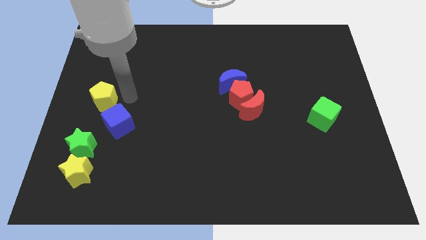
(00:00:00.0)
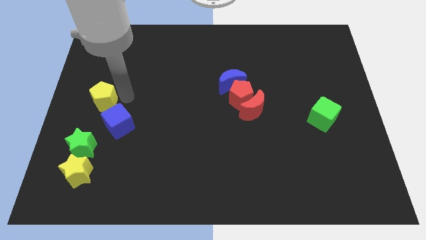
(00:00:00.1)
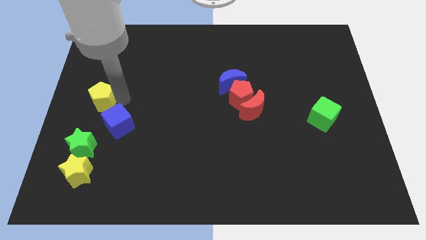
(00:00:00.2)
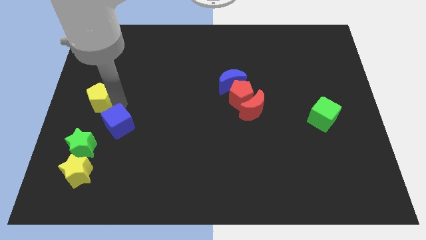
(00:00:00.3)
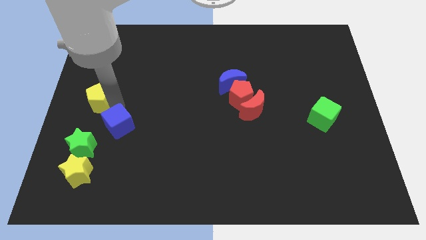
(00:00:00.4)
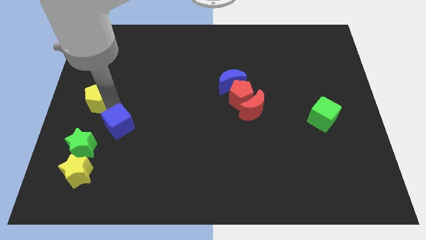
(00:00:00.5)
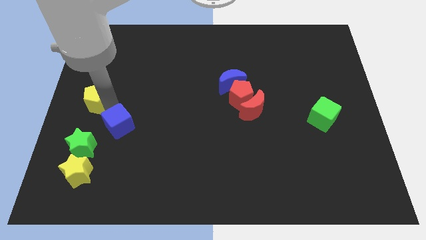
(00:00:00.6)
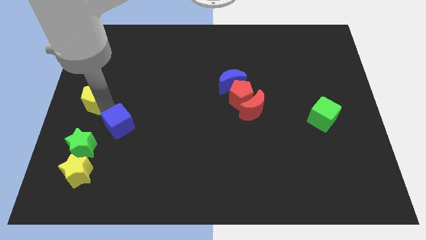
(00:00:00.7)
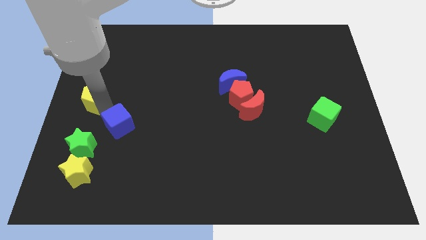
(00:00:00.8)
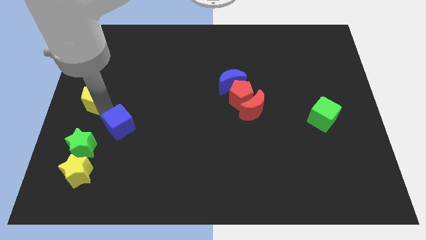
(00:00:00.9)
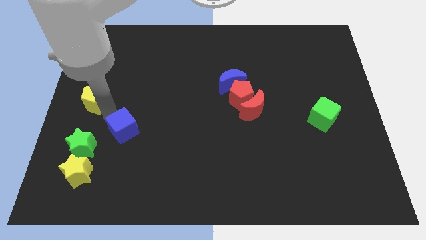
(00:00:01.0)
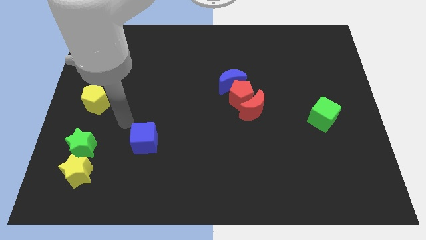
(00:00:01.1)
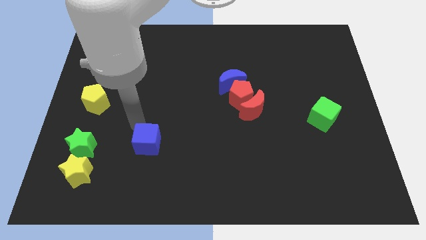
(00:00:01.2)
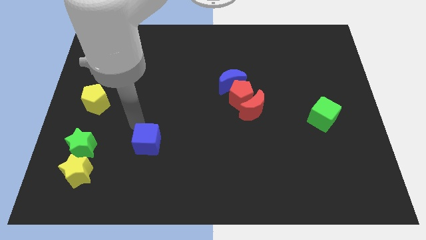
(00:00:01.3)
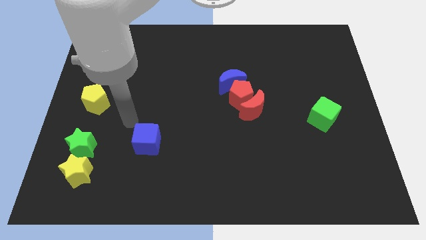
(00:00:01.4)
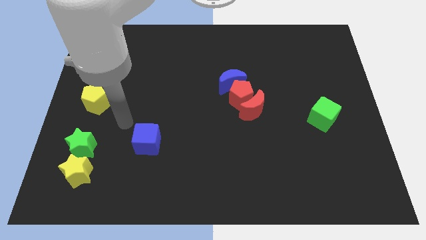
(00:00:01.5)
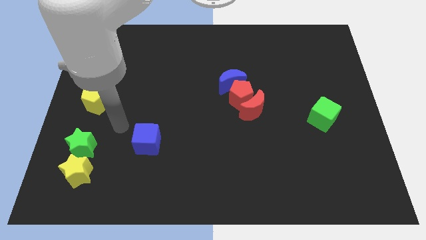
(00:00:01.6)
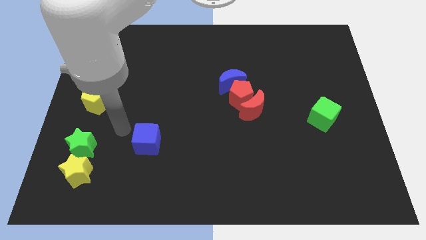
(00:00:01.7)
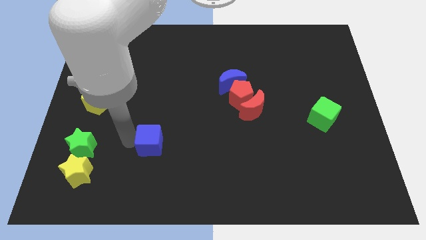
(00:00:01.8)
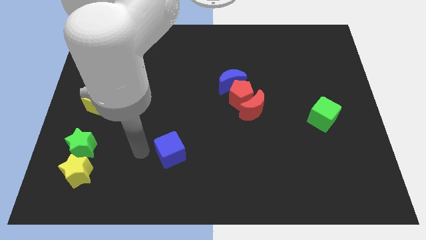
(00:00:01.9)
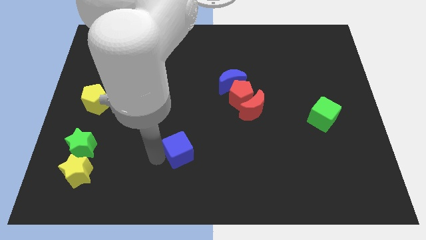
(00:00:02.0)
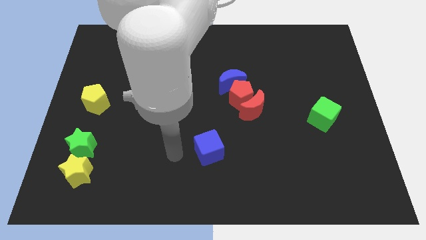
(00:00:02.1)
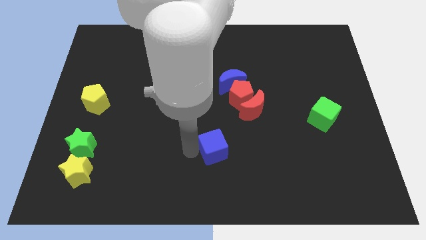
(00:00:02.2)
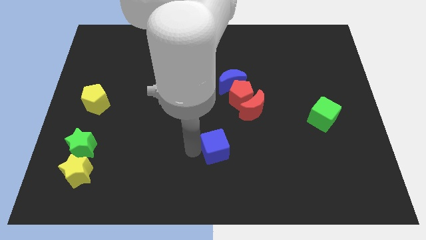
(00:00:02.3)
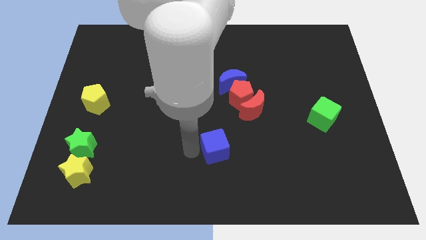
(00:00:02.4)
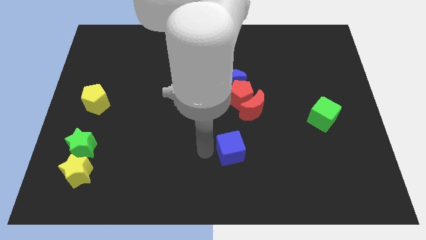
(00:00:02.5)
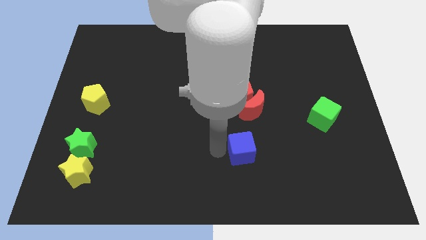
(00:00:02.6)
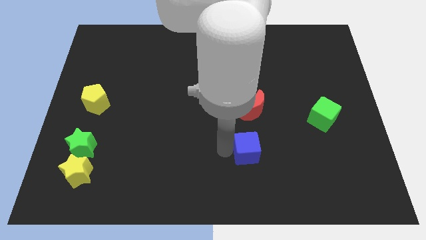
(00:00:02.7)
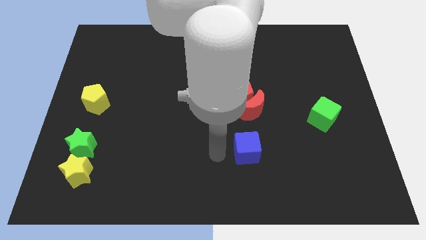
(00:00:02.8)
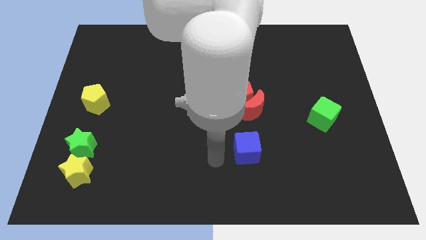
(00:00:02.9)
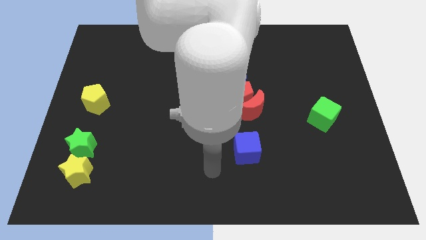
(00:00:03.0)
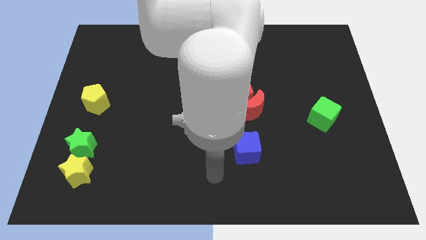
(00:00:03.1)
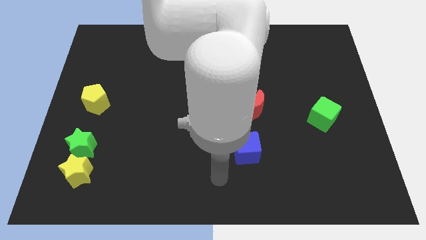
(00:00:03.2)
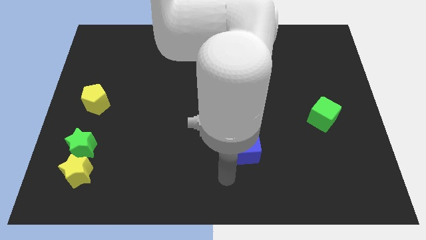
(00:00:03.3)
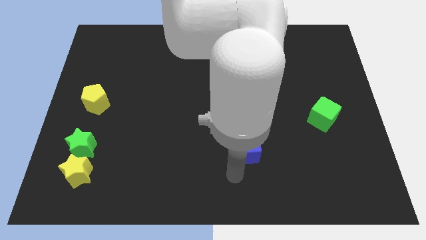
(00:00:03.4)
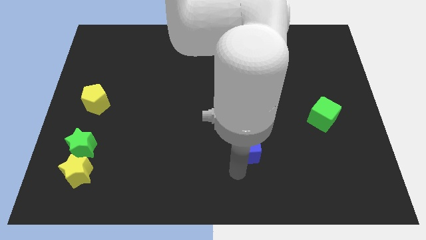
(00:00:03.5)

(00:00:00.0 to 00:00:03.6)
move the blue cube away from the yellow pentagon

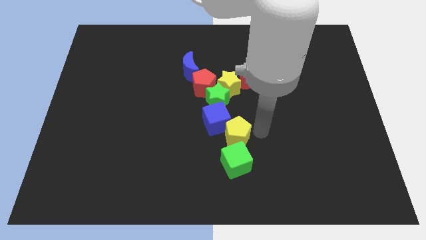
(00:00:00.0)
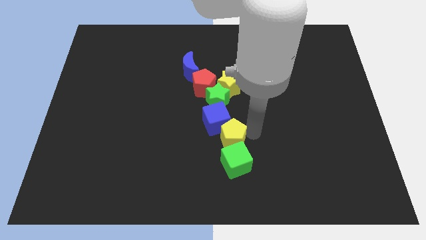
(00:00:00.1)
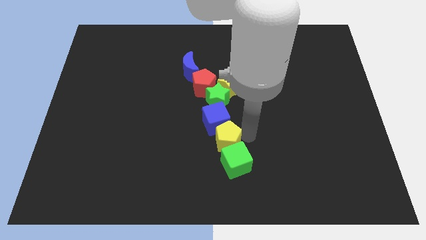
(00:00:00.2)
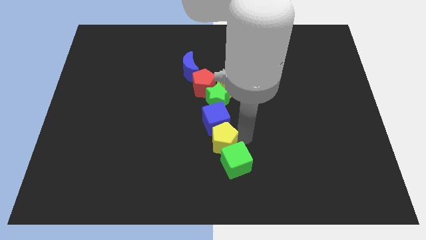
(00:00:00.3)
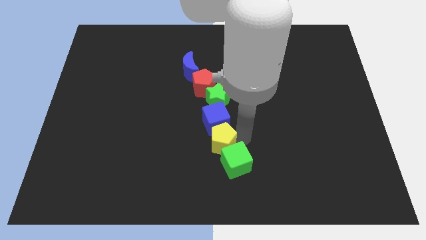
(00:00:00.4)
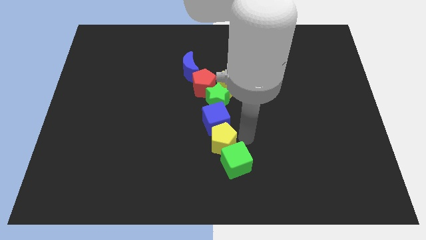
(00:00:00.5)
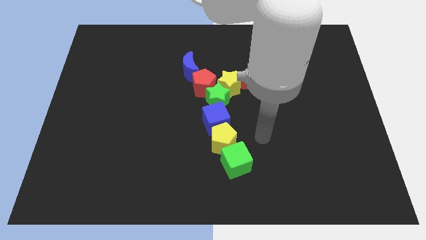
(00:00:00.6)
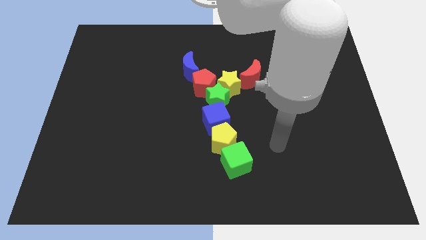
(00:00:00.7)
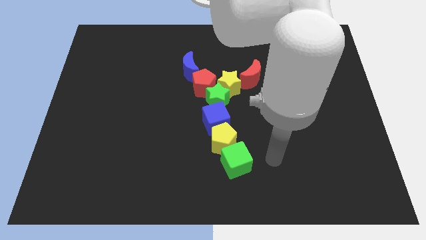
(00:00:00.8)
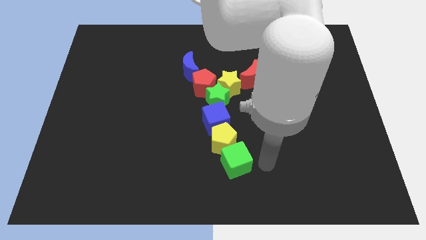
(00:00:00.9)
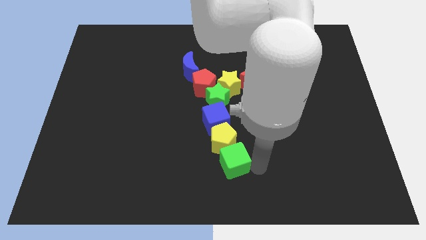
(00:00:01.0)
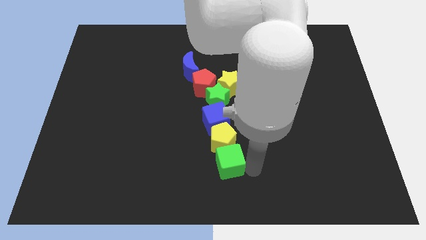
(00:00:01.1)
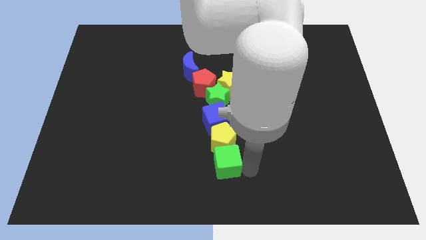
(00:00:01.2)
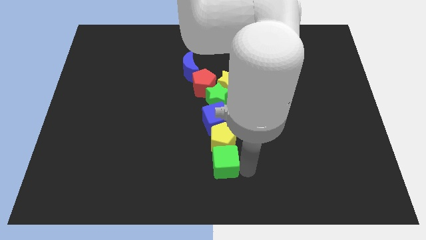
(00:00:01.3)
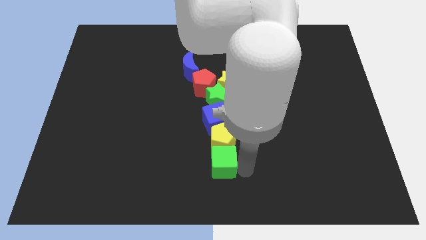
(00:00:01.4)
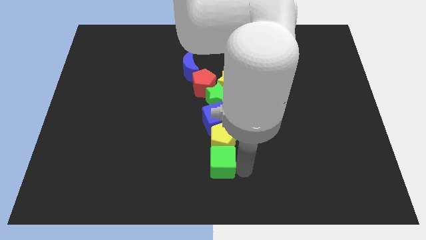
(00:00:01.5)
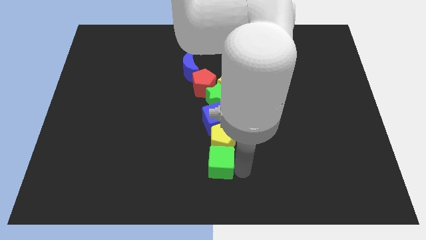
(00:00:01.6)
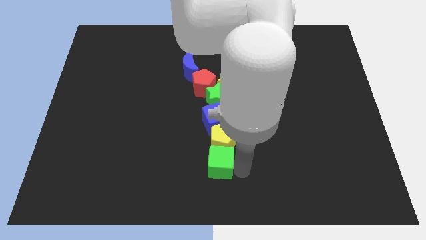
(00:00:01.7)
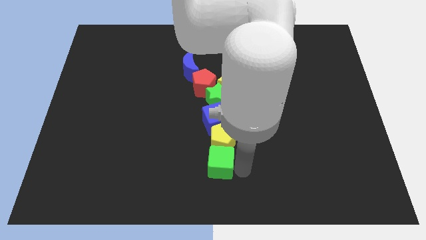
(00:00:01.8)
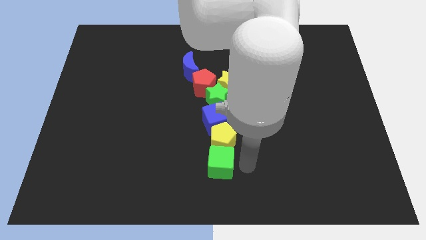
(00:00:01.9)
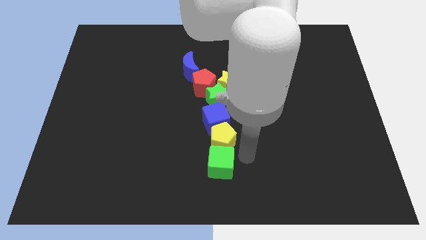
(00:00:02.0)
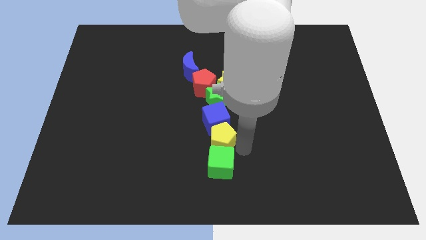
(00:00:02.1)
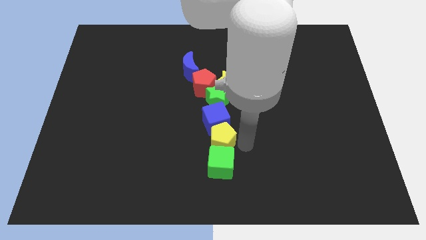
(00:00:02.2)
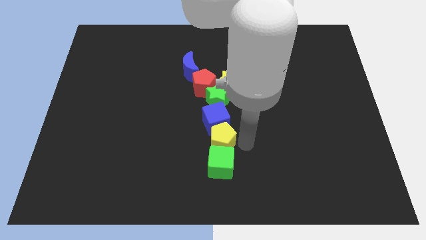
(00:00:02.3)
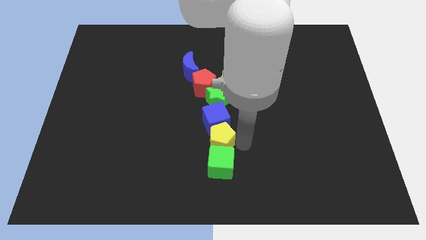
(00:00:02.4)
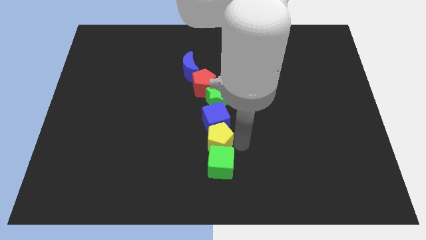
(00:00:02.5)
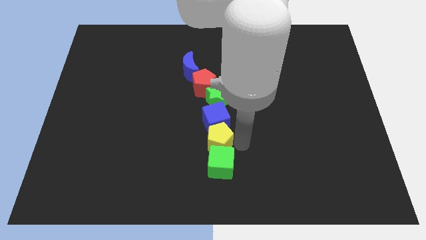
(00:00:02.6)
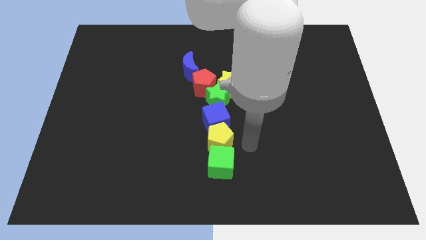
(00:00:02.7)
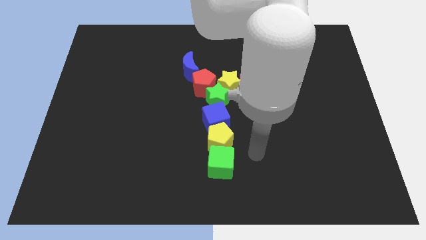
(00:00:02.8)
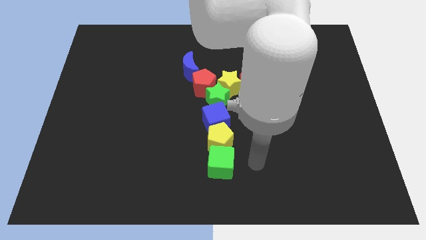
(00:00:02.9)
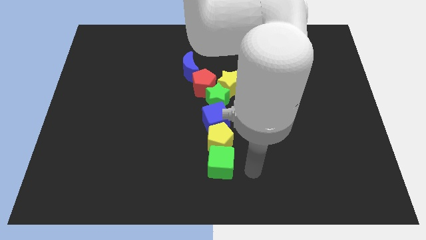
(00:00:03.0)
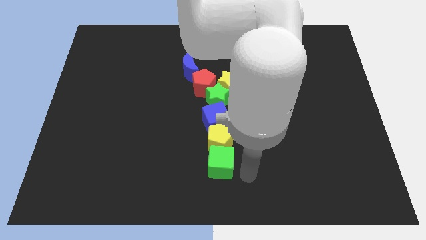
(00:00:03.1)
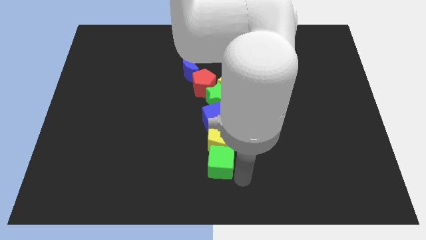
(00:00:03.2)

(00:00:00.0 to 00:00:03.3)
move yellow pentagon in between the green cube and blue cube

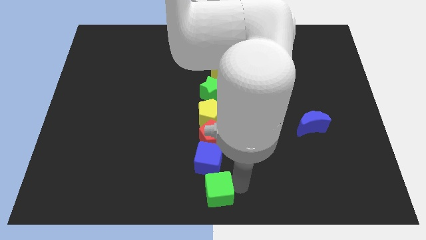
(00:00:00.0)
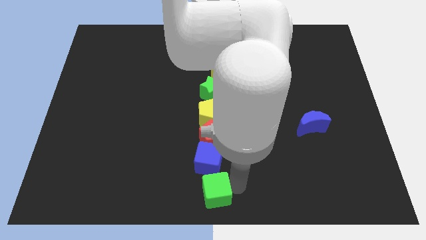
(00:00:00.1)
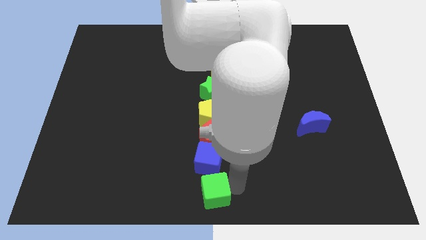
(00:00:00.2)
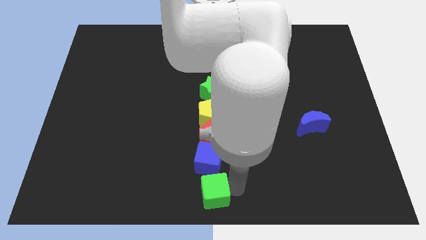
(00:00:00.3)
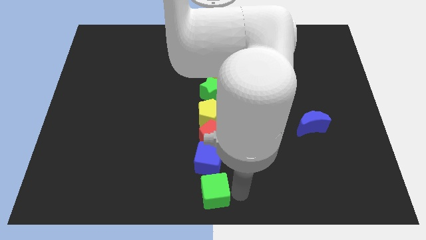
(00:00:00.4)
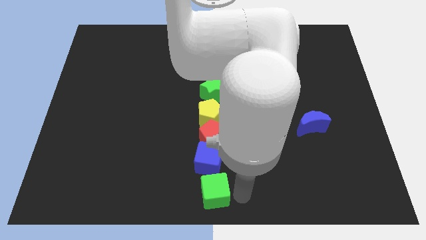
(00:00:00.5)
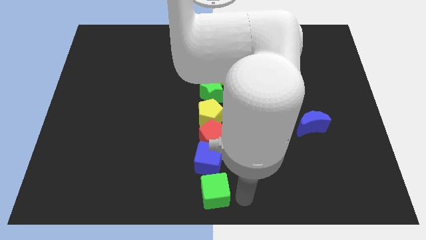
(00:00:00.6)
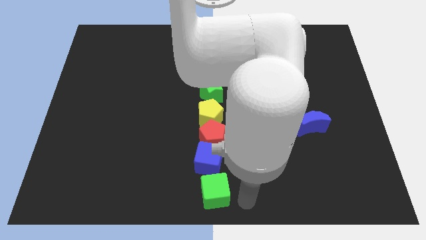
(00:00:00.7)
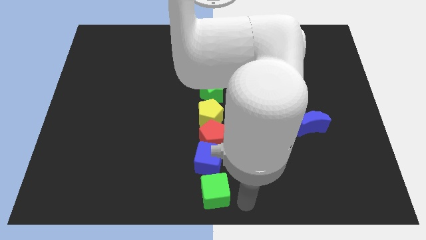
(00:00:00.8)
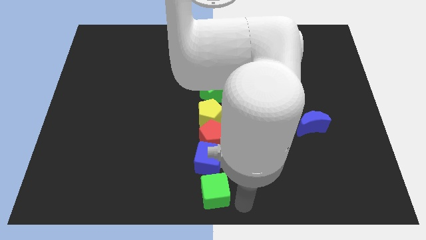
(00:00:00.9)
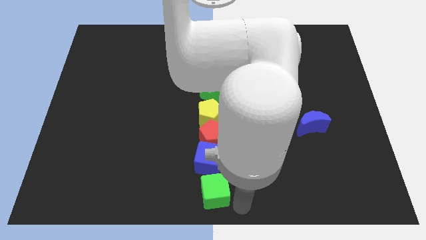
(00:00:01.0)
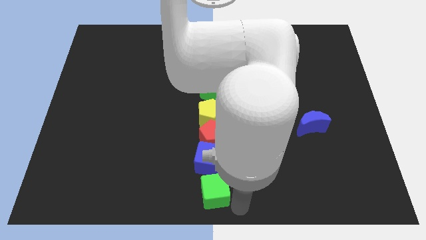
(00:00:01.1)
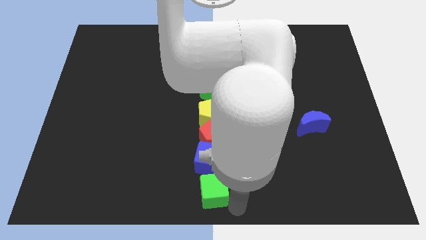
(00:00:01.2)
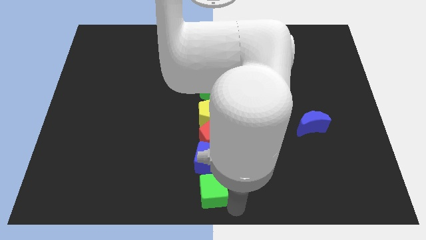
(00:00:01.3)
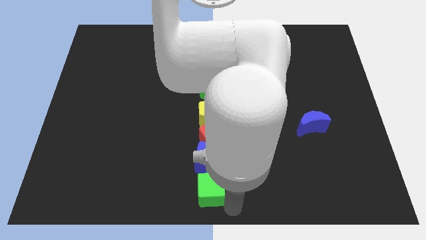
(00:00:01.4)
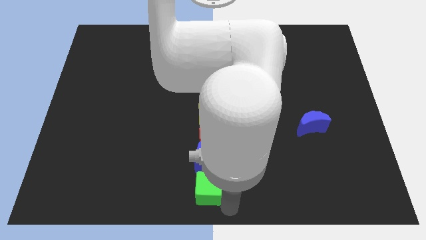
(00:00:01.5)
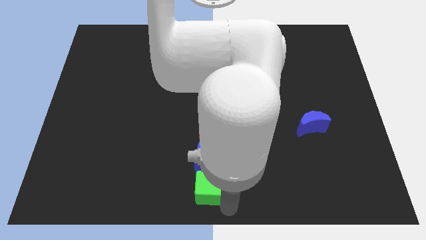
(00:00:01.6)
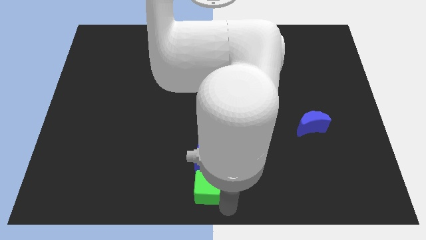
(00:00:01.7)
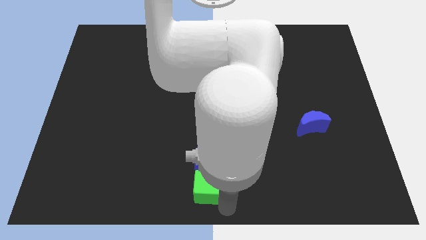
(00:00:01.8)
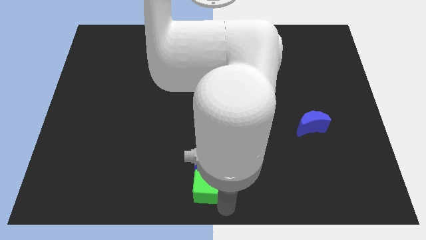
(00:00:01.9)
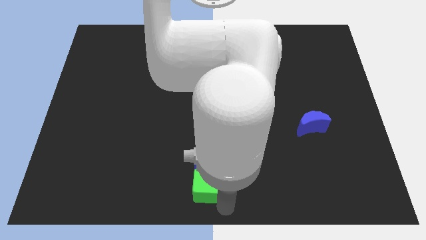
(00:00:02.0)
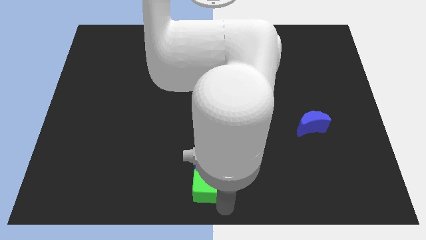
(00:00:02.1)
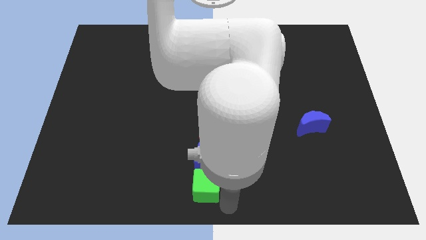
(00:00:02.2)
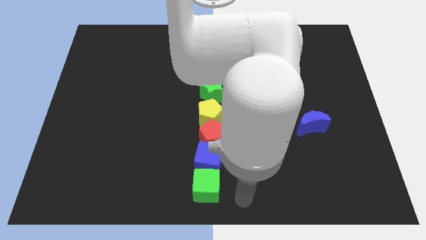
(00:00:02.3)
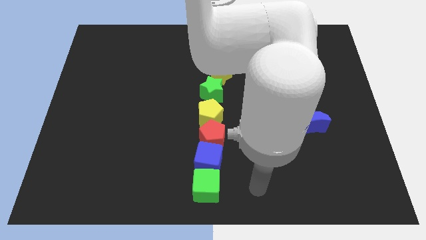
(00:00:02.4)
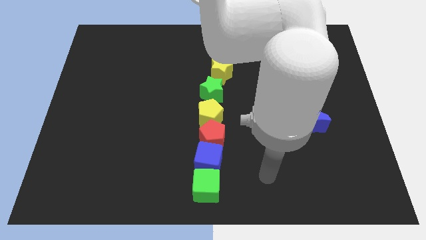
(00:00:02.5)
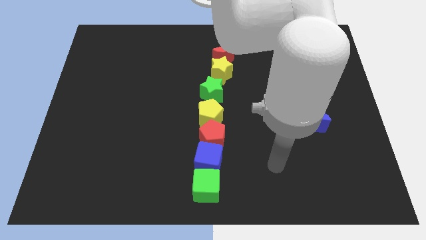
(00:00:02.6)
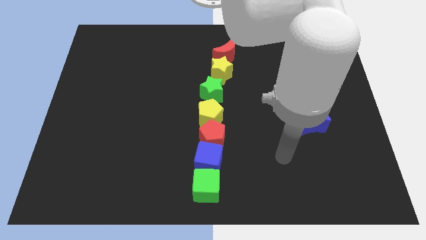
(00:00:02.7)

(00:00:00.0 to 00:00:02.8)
move green cube near blue cube to form a vertical line
